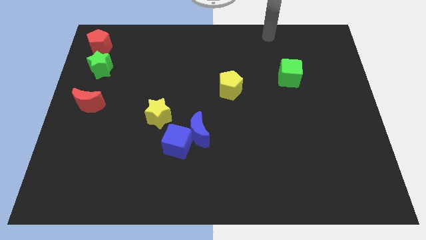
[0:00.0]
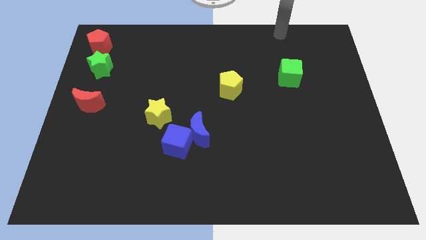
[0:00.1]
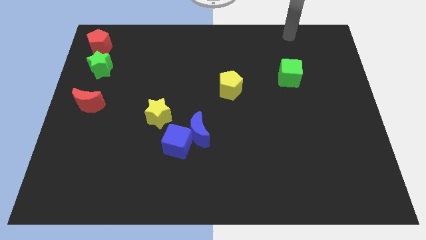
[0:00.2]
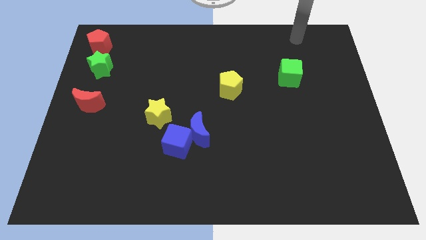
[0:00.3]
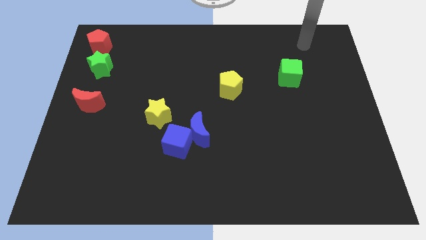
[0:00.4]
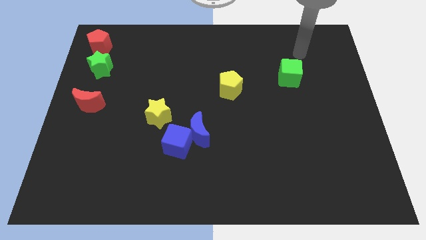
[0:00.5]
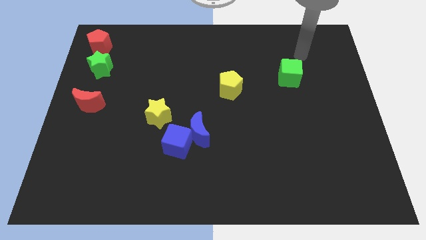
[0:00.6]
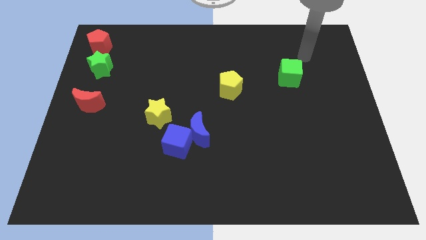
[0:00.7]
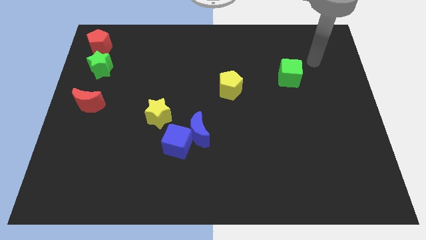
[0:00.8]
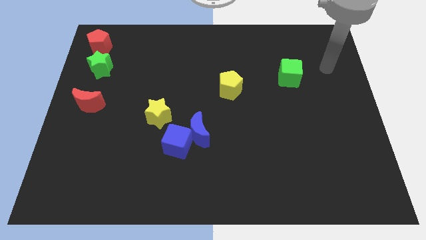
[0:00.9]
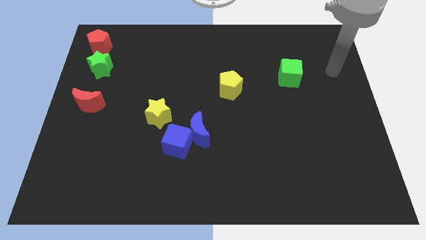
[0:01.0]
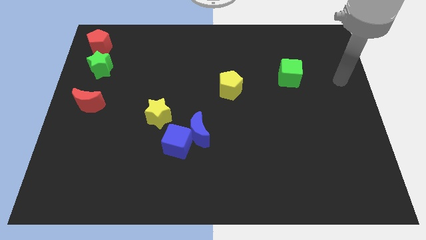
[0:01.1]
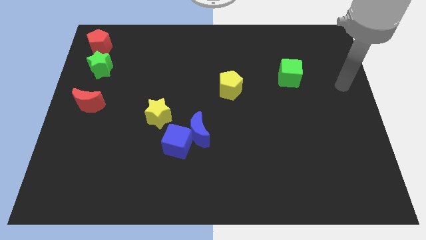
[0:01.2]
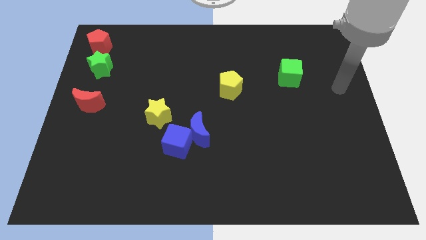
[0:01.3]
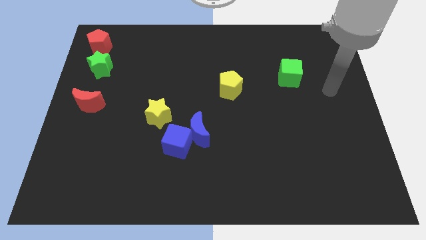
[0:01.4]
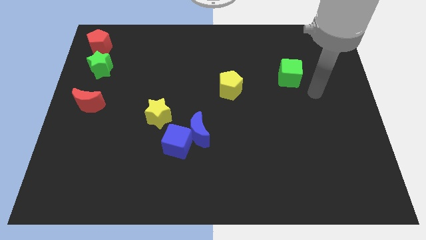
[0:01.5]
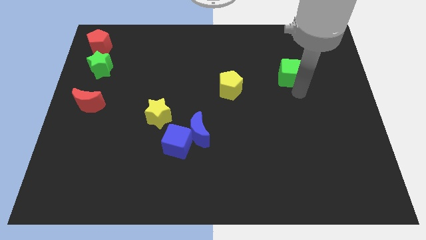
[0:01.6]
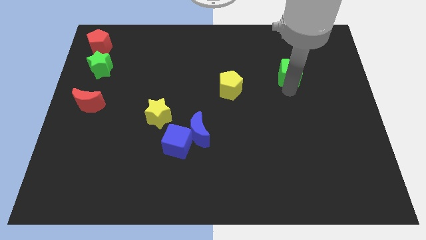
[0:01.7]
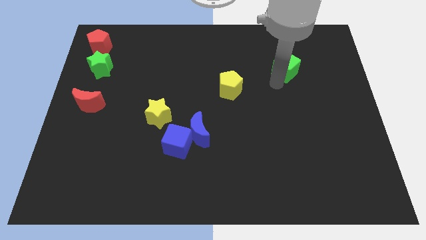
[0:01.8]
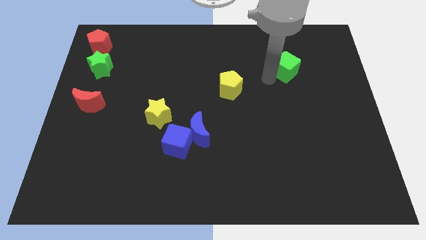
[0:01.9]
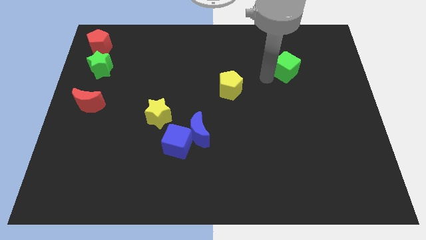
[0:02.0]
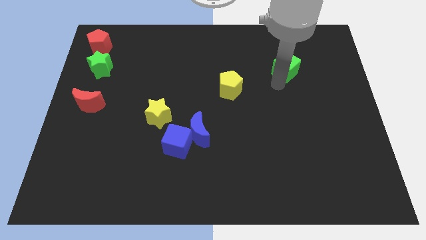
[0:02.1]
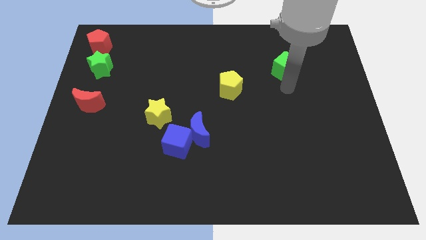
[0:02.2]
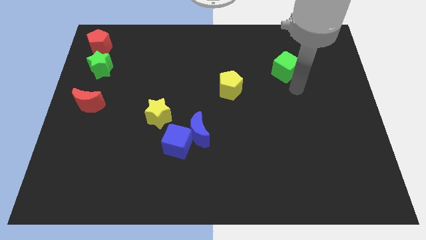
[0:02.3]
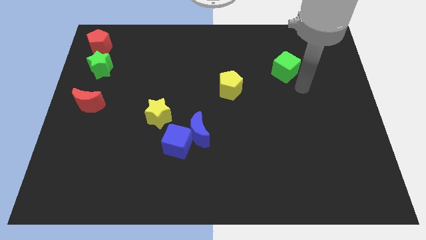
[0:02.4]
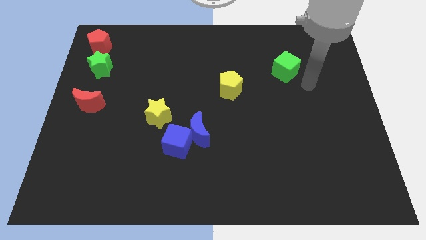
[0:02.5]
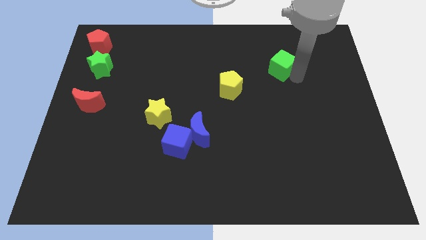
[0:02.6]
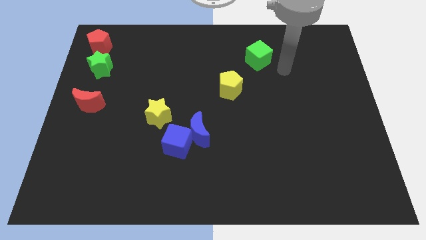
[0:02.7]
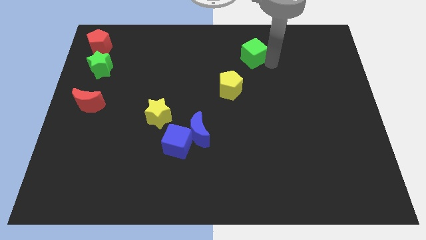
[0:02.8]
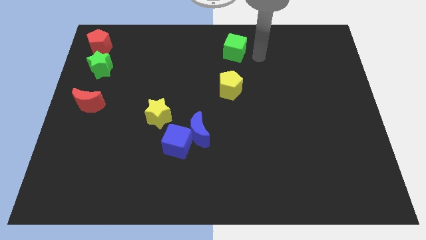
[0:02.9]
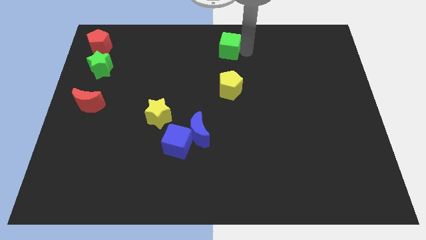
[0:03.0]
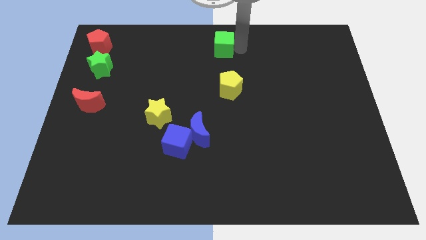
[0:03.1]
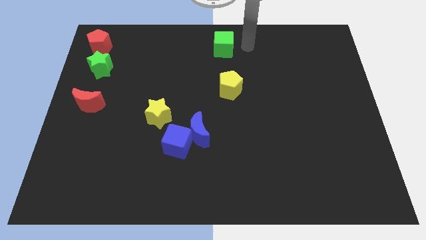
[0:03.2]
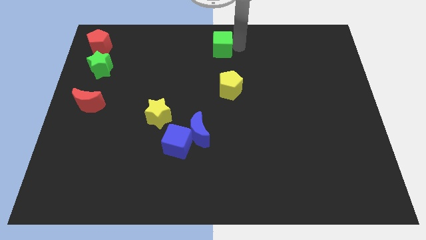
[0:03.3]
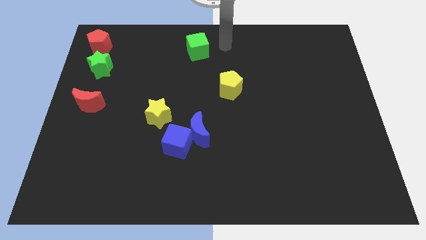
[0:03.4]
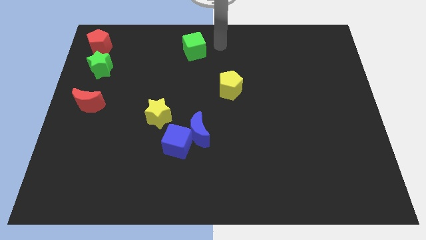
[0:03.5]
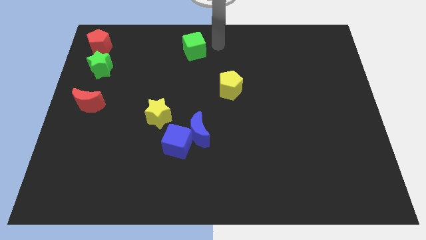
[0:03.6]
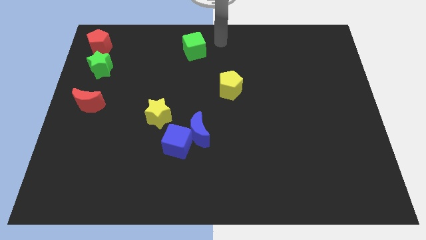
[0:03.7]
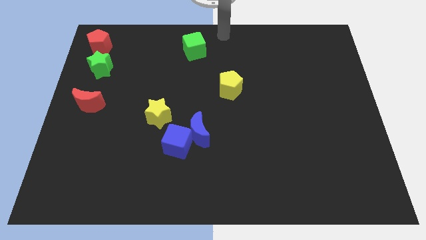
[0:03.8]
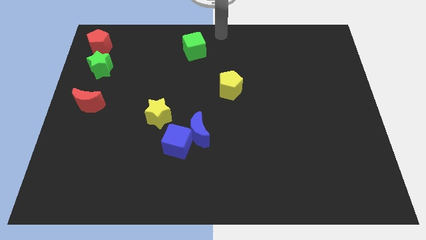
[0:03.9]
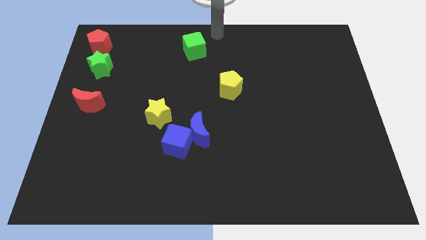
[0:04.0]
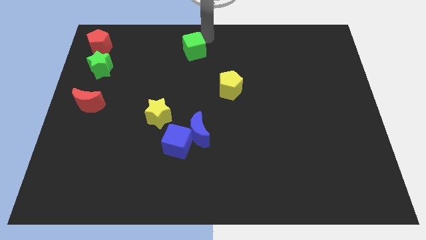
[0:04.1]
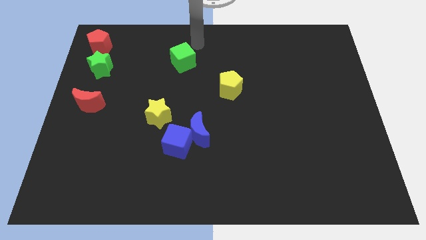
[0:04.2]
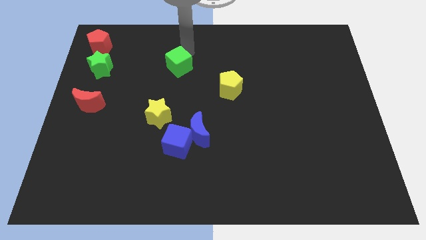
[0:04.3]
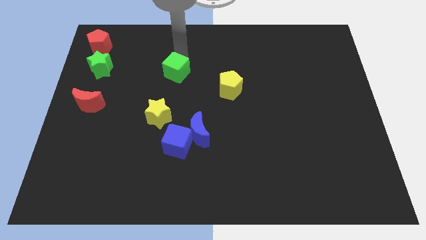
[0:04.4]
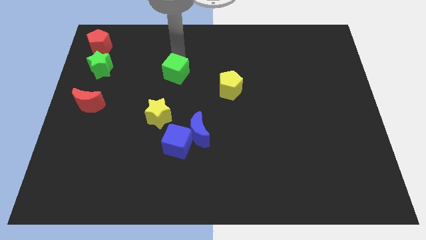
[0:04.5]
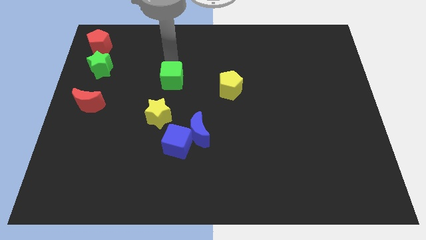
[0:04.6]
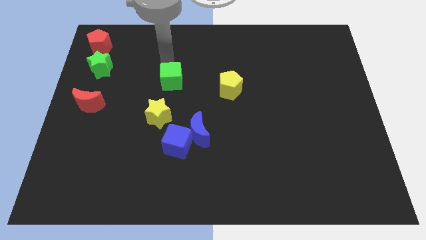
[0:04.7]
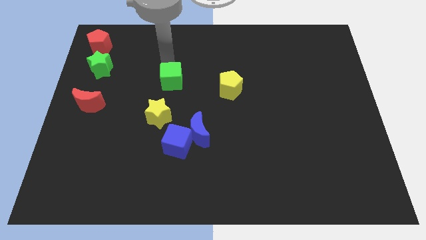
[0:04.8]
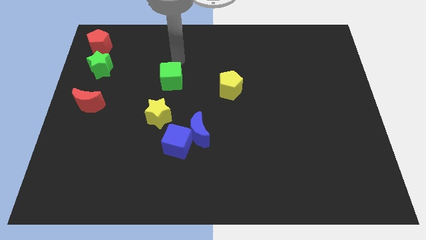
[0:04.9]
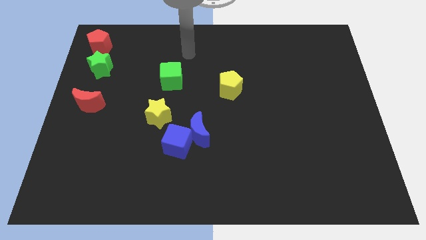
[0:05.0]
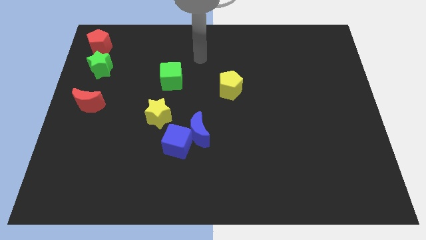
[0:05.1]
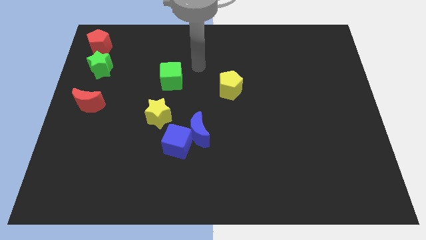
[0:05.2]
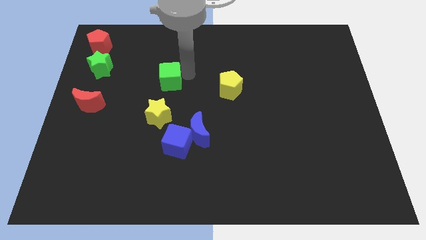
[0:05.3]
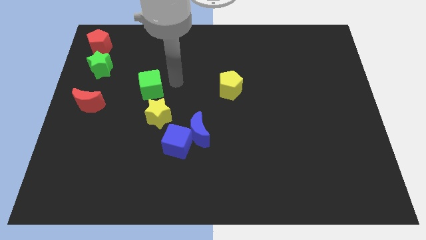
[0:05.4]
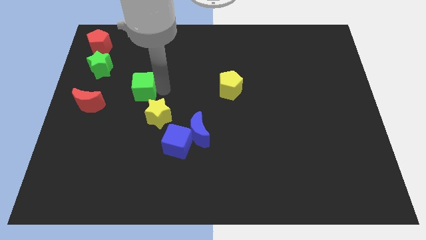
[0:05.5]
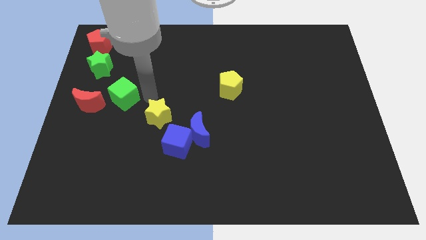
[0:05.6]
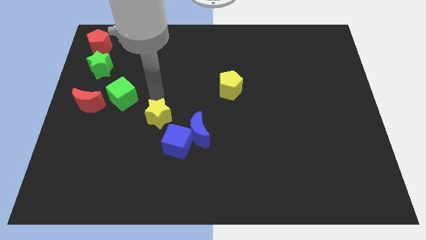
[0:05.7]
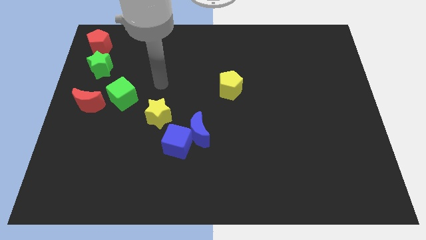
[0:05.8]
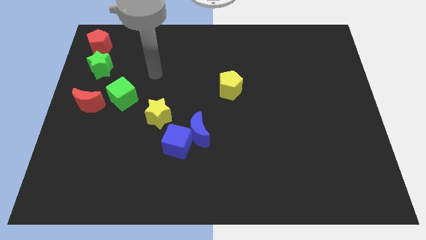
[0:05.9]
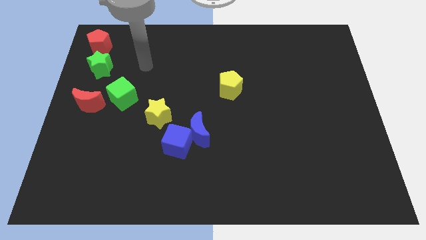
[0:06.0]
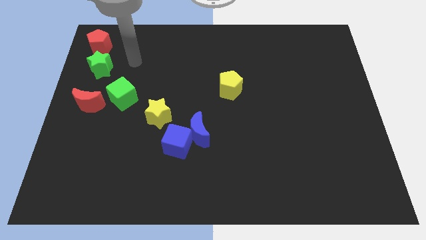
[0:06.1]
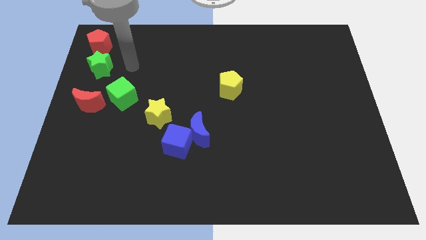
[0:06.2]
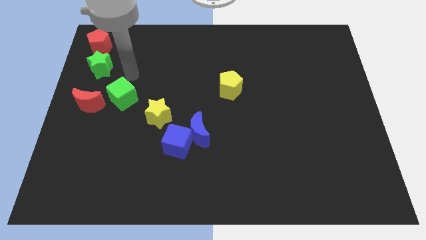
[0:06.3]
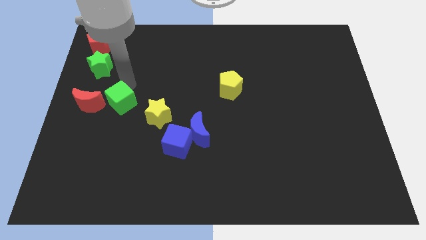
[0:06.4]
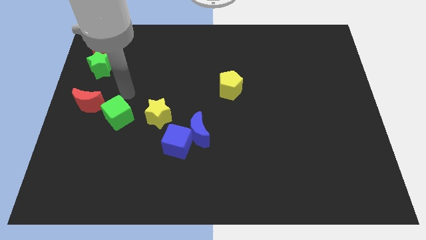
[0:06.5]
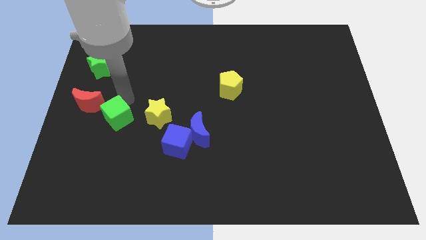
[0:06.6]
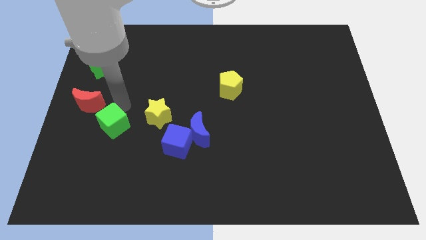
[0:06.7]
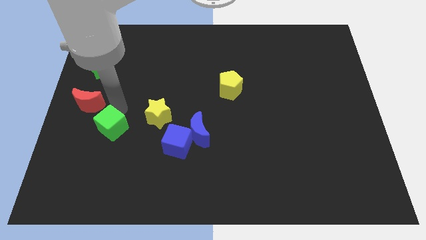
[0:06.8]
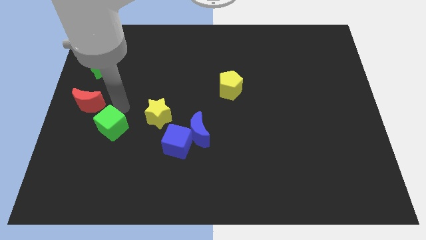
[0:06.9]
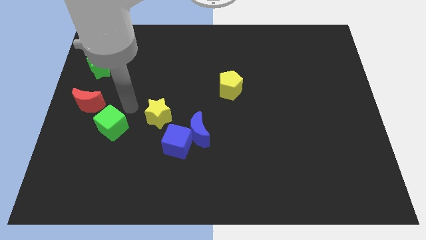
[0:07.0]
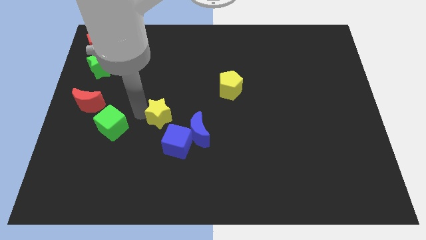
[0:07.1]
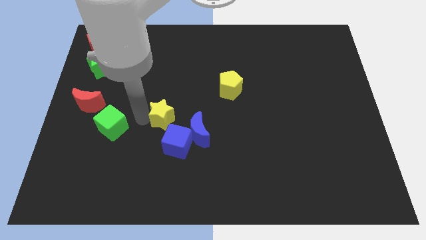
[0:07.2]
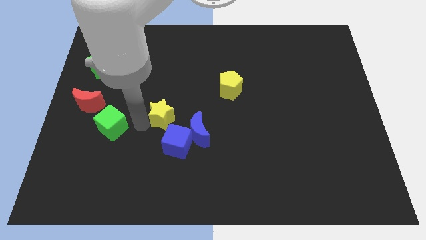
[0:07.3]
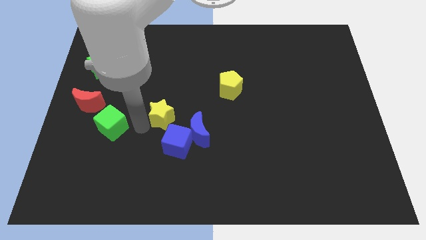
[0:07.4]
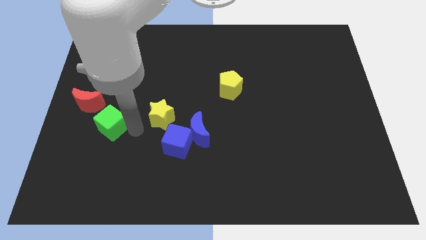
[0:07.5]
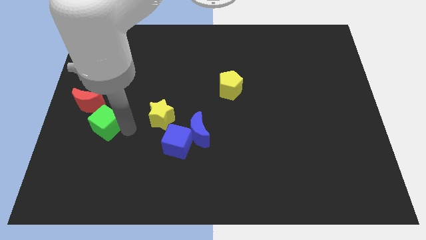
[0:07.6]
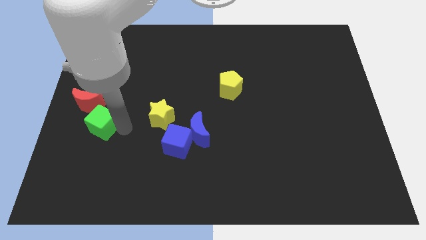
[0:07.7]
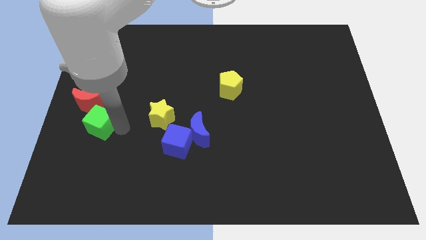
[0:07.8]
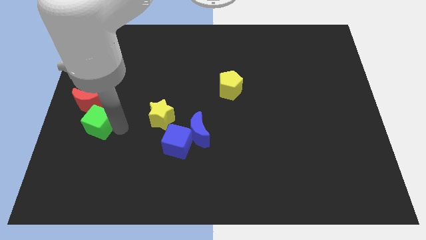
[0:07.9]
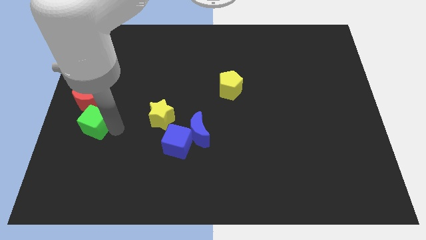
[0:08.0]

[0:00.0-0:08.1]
slide the green cube to the left side center corner

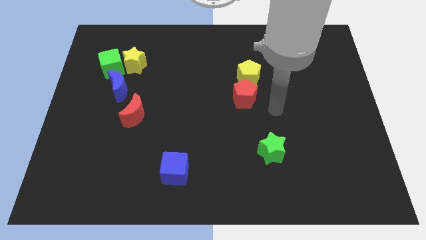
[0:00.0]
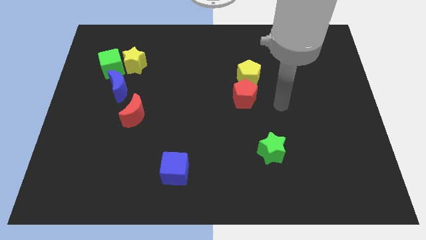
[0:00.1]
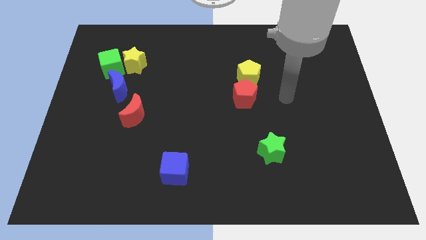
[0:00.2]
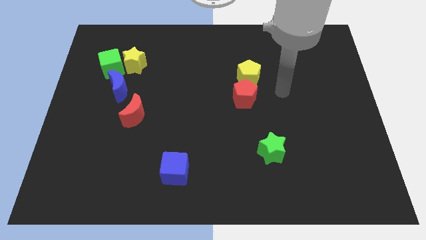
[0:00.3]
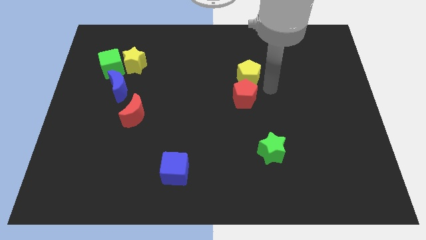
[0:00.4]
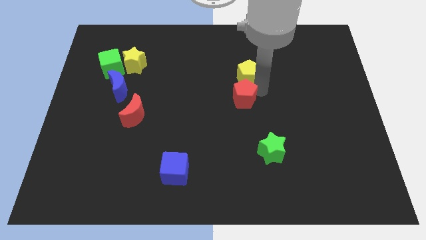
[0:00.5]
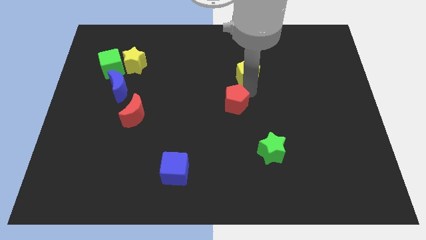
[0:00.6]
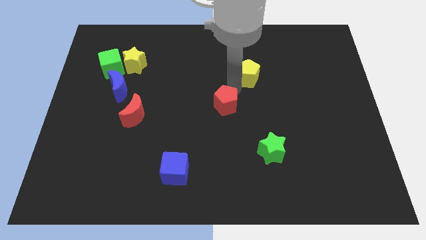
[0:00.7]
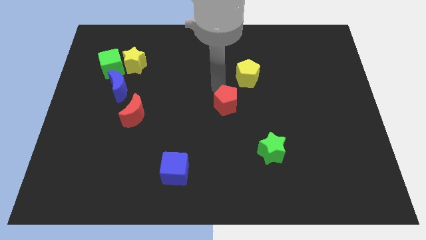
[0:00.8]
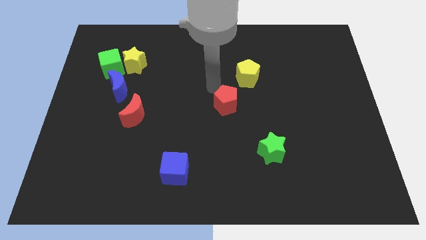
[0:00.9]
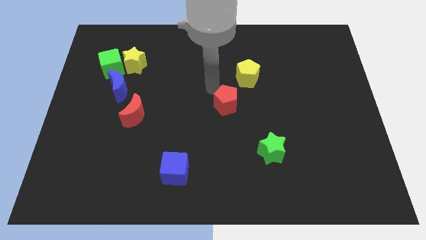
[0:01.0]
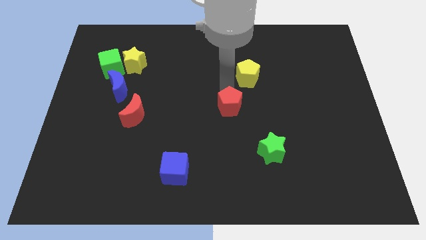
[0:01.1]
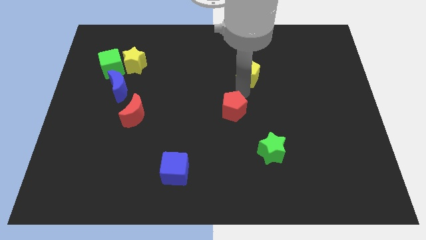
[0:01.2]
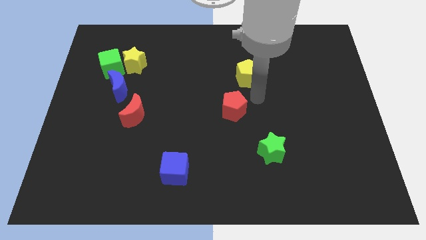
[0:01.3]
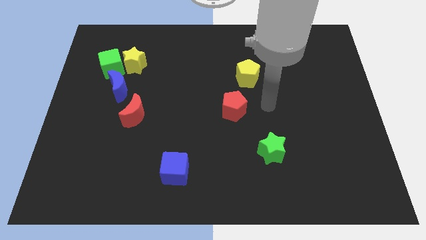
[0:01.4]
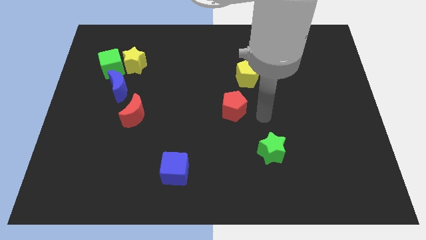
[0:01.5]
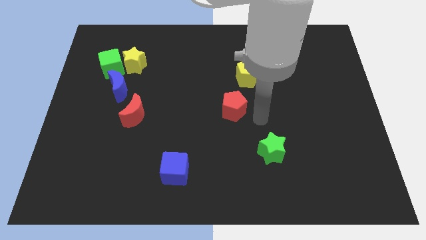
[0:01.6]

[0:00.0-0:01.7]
separate the red pentagon from the yellow pentagon
